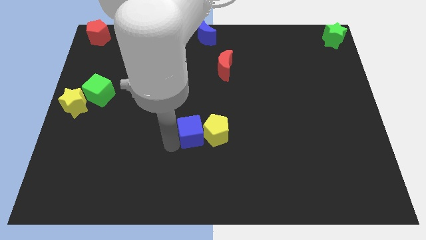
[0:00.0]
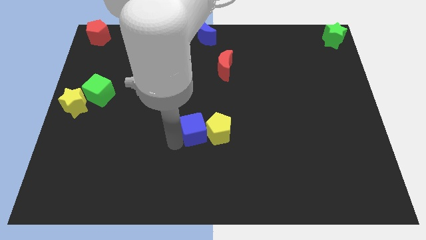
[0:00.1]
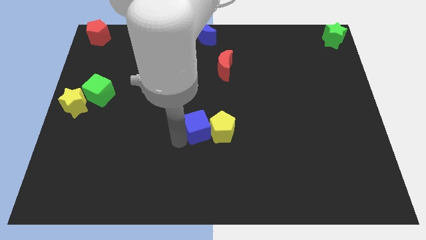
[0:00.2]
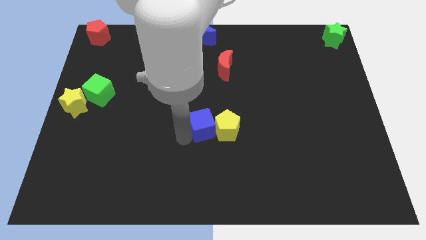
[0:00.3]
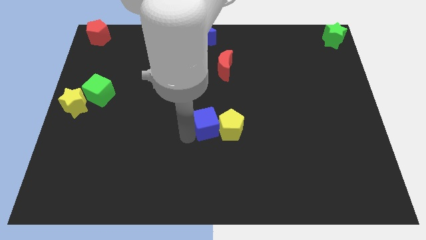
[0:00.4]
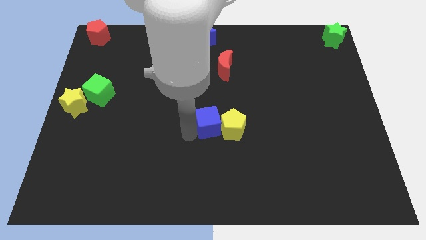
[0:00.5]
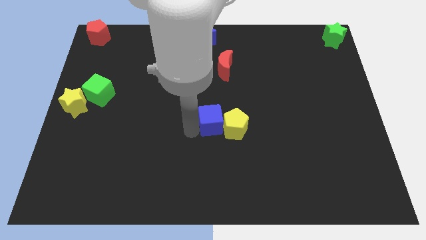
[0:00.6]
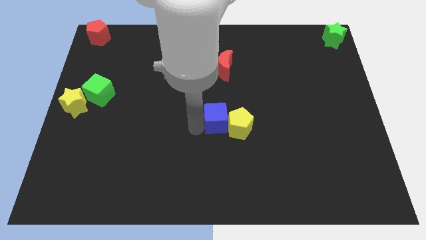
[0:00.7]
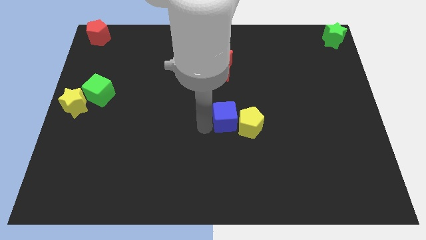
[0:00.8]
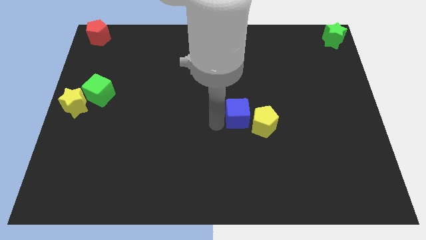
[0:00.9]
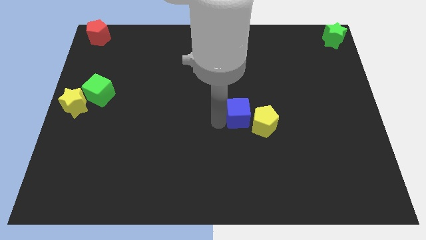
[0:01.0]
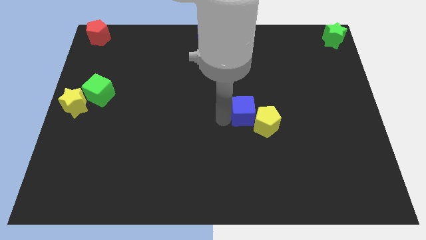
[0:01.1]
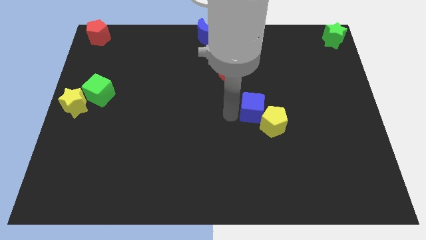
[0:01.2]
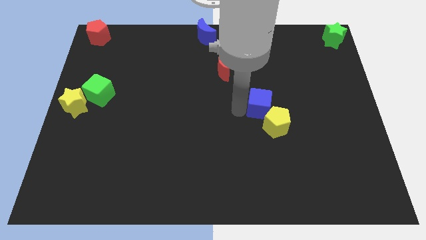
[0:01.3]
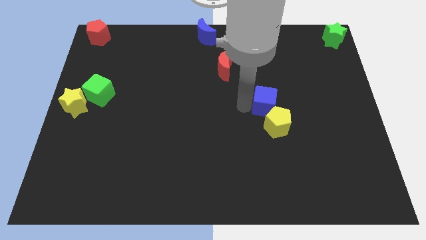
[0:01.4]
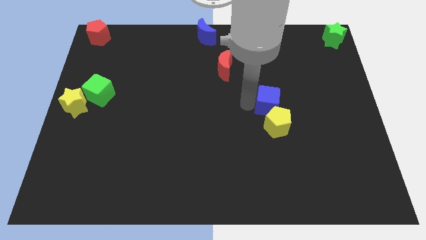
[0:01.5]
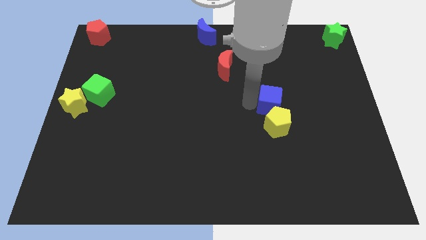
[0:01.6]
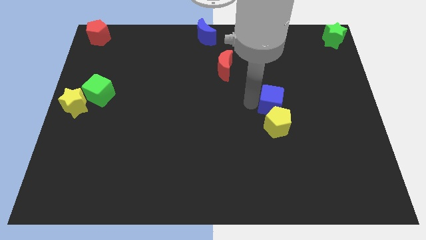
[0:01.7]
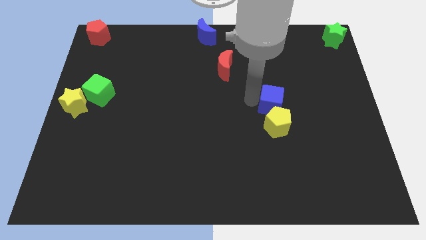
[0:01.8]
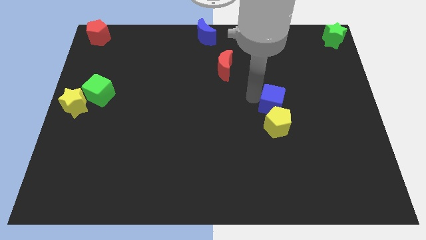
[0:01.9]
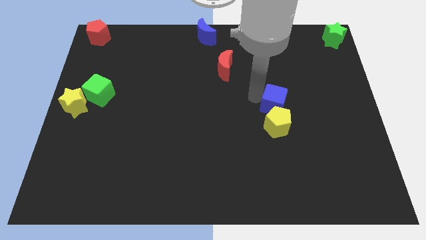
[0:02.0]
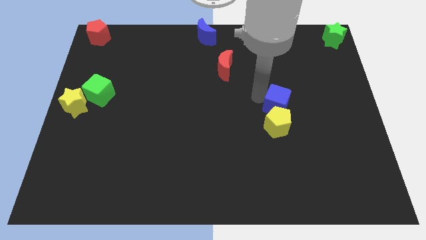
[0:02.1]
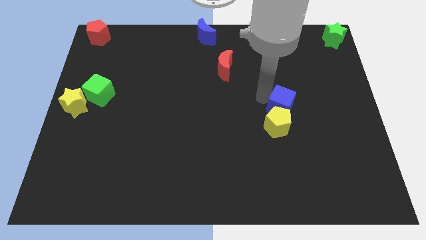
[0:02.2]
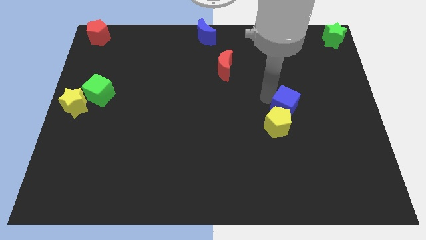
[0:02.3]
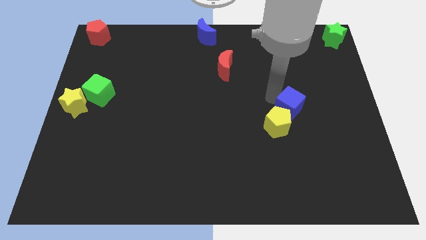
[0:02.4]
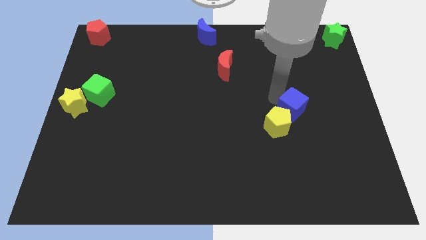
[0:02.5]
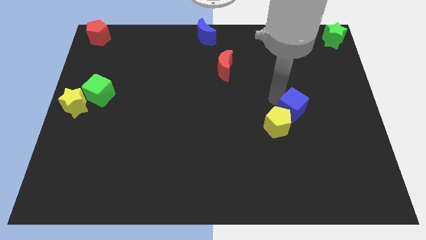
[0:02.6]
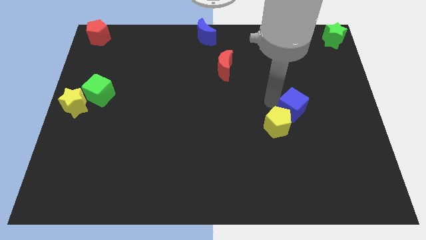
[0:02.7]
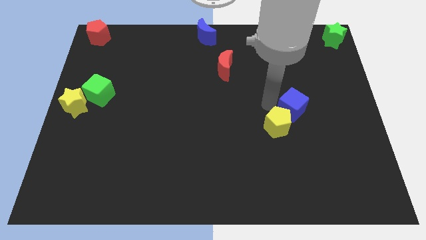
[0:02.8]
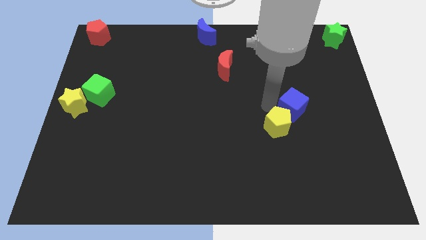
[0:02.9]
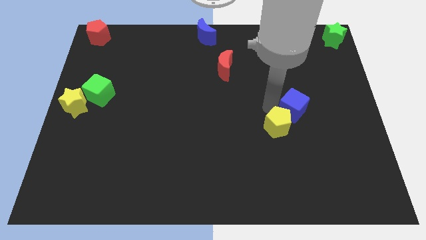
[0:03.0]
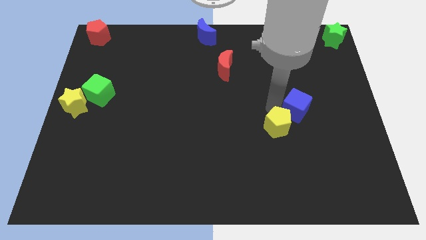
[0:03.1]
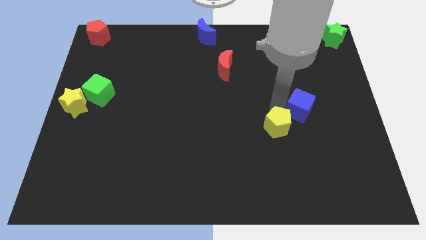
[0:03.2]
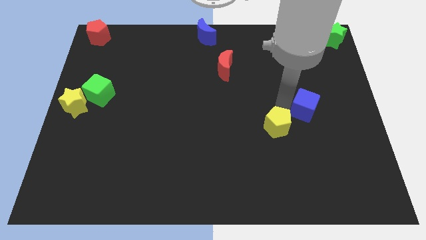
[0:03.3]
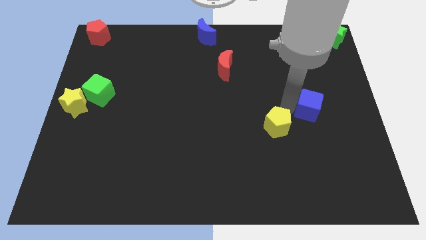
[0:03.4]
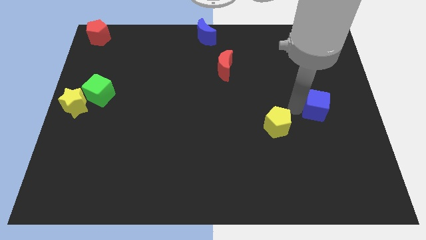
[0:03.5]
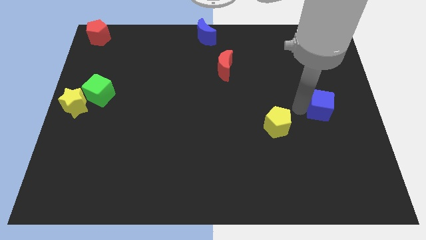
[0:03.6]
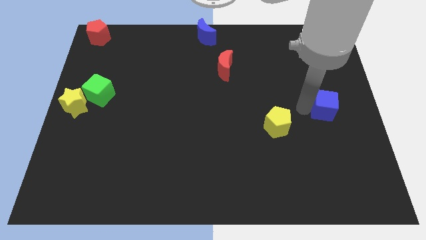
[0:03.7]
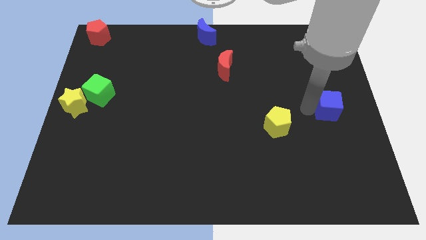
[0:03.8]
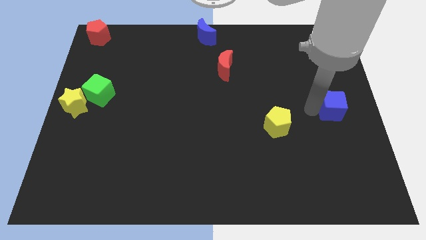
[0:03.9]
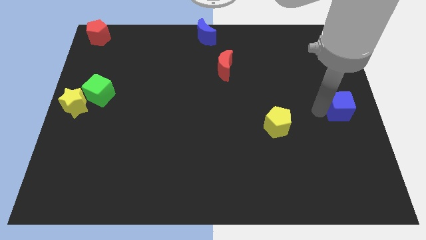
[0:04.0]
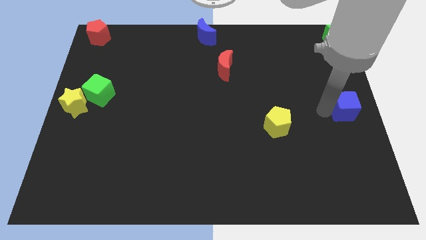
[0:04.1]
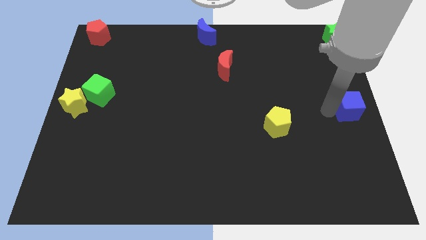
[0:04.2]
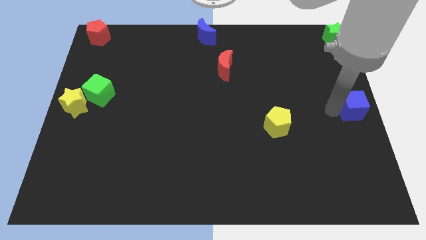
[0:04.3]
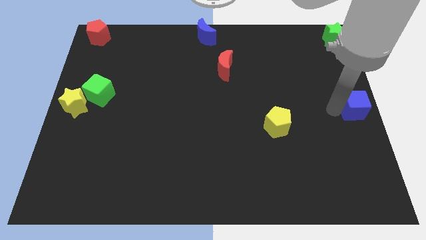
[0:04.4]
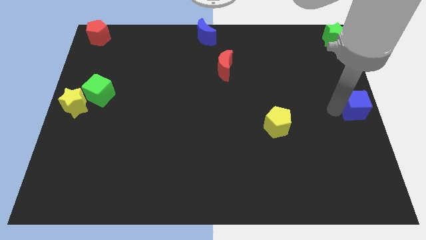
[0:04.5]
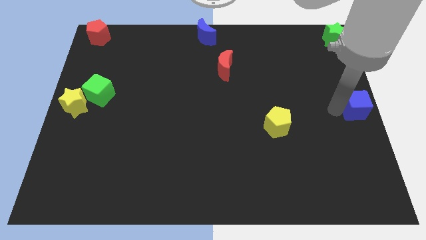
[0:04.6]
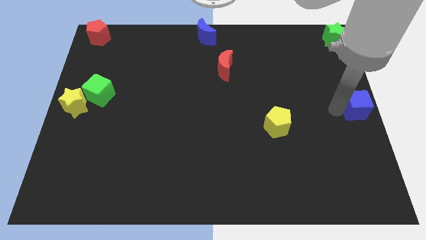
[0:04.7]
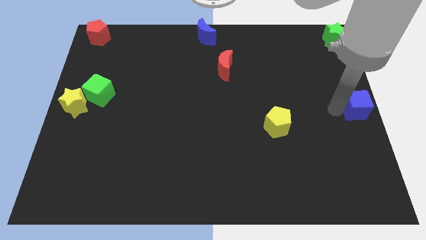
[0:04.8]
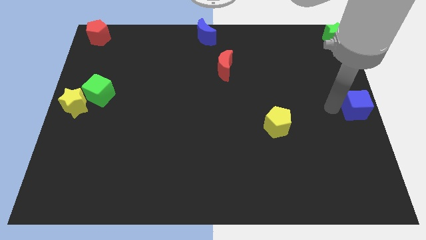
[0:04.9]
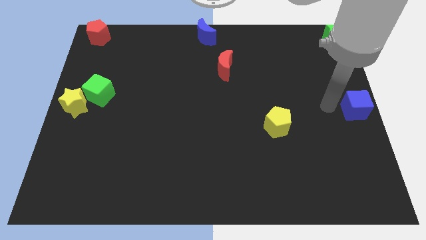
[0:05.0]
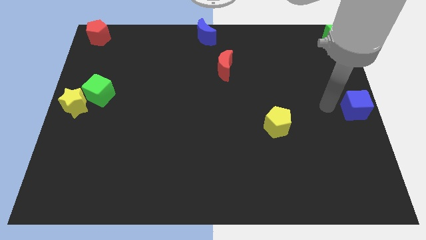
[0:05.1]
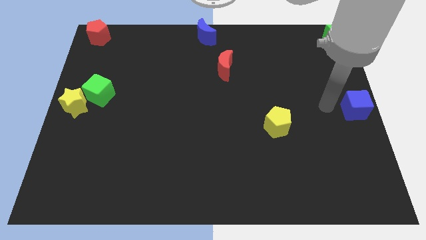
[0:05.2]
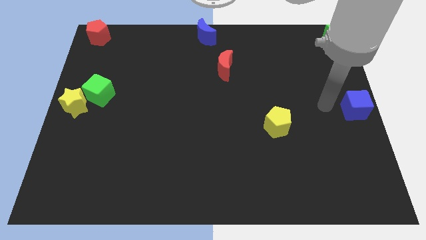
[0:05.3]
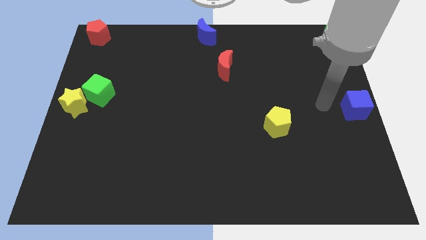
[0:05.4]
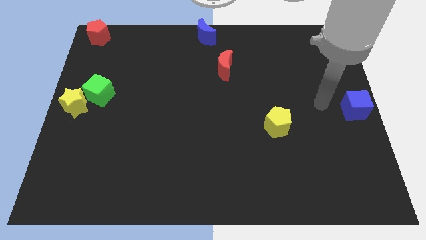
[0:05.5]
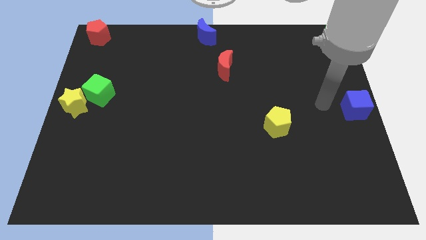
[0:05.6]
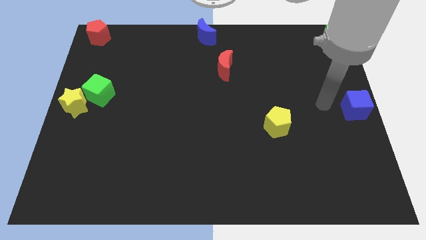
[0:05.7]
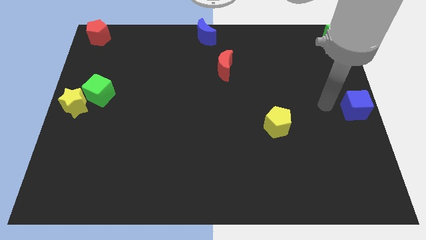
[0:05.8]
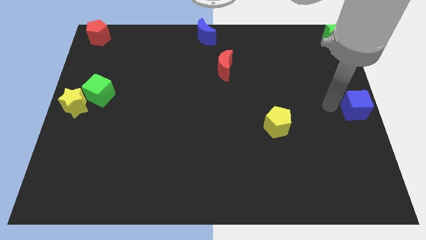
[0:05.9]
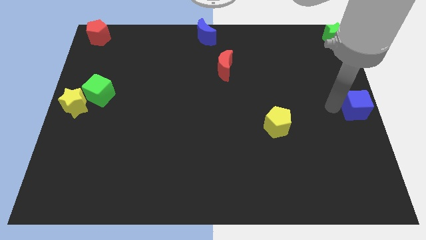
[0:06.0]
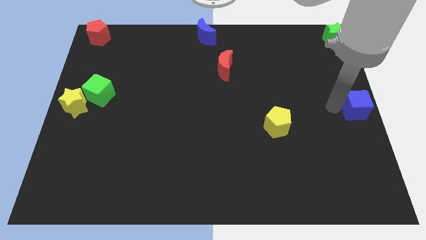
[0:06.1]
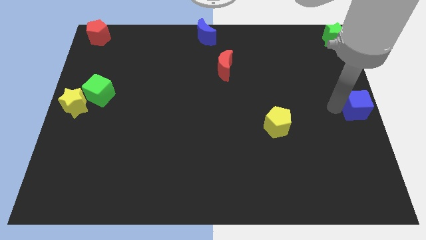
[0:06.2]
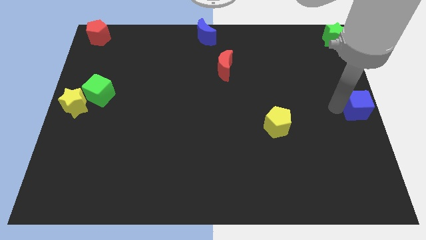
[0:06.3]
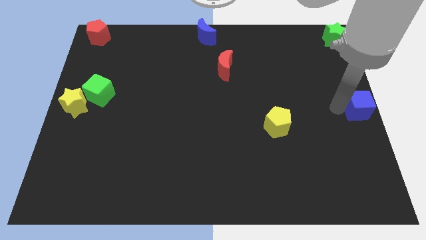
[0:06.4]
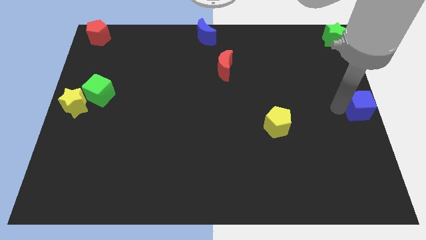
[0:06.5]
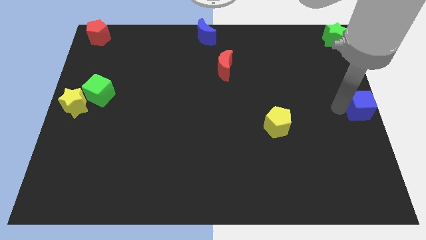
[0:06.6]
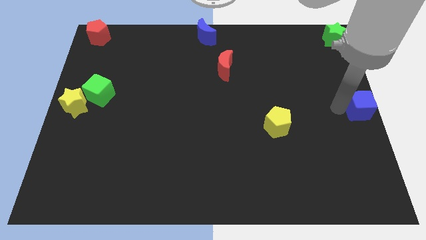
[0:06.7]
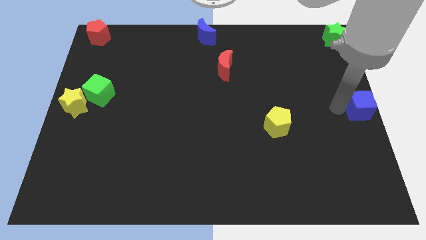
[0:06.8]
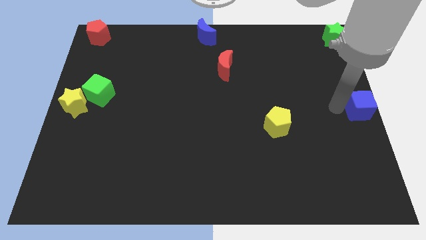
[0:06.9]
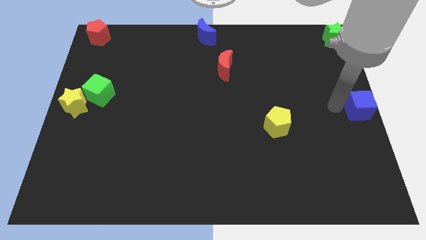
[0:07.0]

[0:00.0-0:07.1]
push the blue cube to the right center on the board

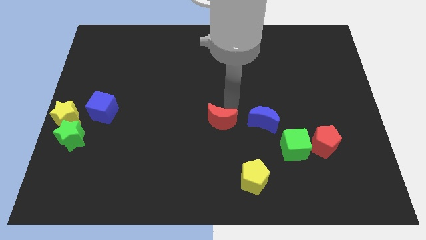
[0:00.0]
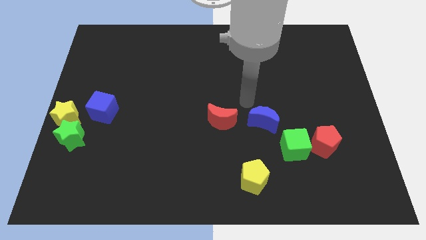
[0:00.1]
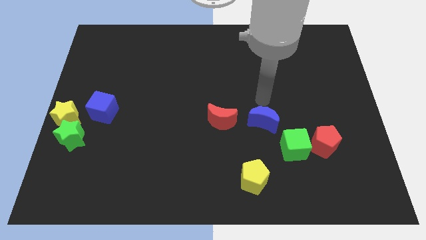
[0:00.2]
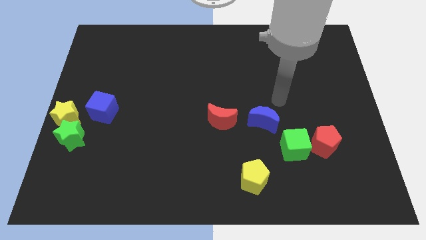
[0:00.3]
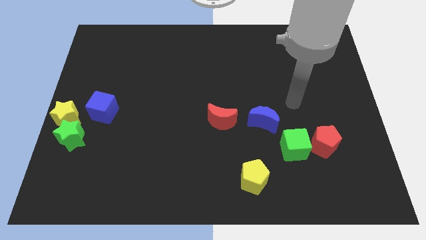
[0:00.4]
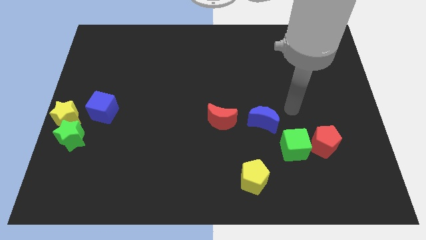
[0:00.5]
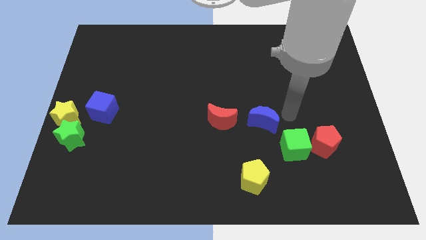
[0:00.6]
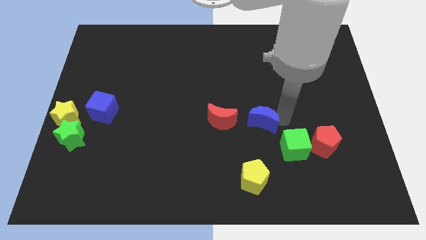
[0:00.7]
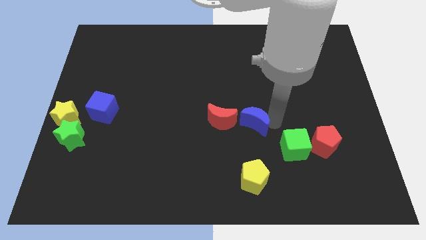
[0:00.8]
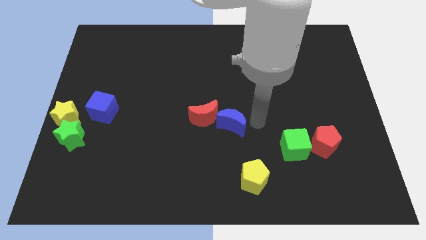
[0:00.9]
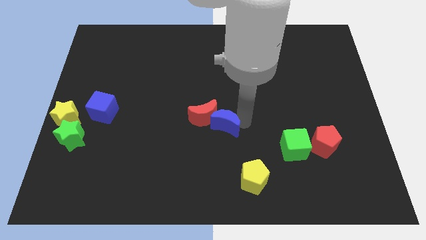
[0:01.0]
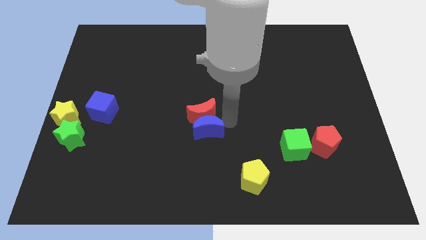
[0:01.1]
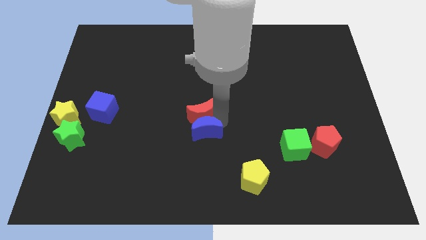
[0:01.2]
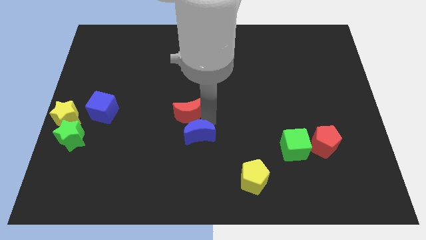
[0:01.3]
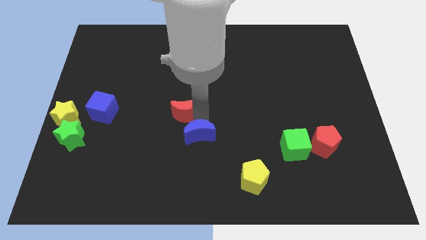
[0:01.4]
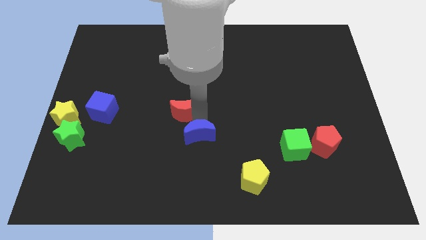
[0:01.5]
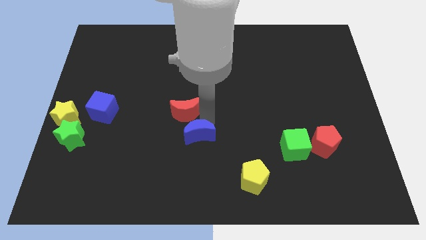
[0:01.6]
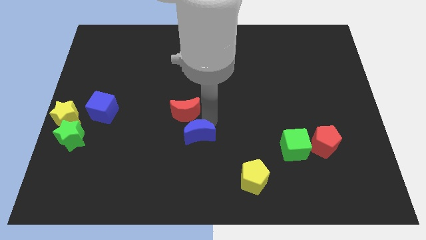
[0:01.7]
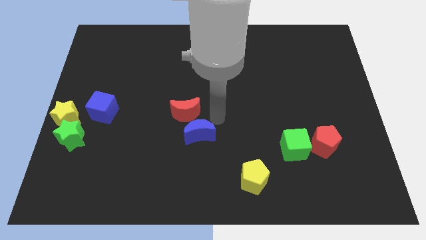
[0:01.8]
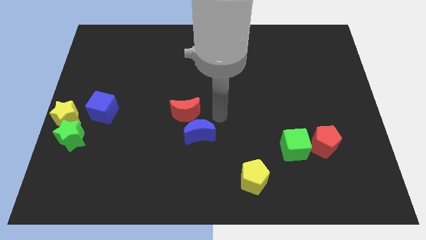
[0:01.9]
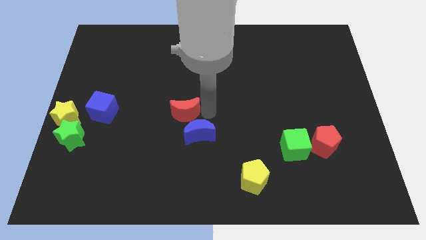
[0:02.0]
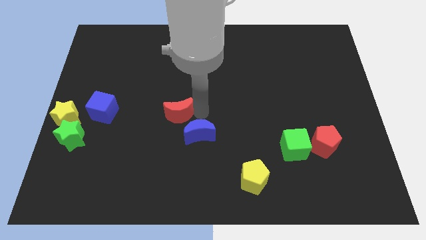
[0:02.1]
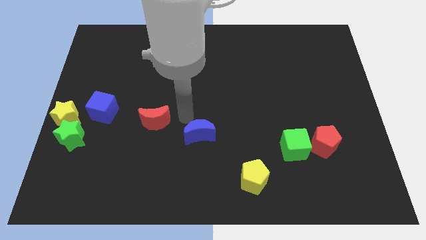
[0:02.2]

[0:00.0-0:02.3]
move red moon in between blue blocks
